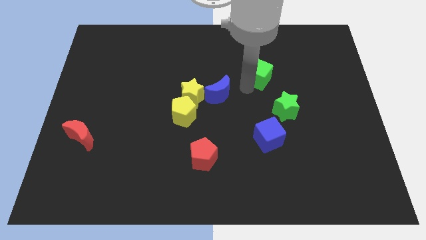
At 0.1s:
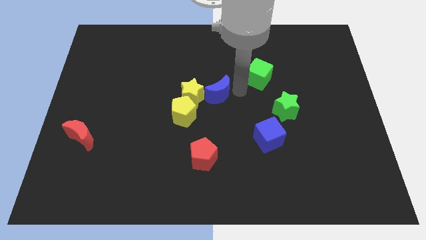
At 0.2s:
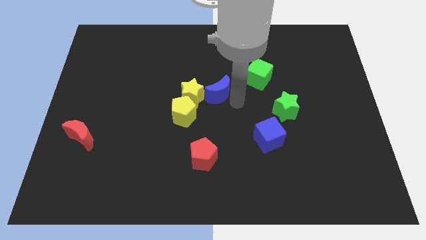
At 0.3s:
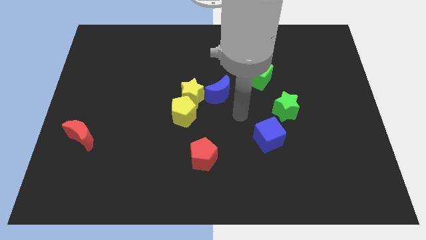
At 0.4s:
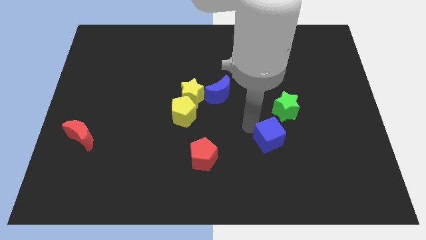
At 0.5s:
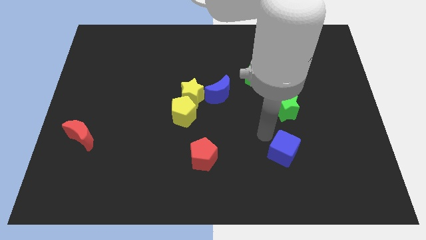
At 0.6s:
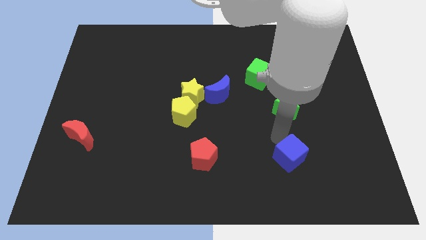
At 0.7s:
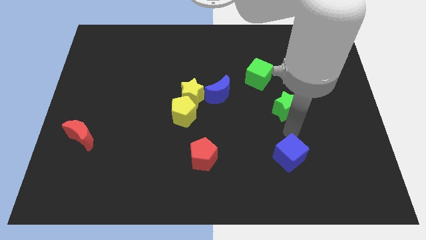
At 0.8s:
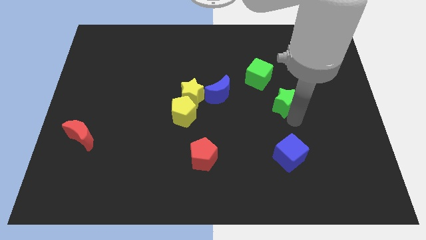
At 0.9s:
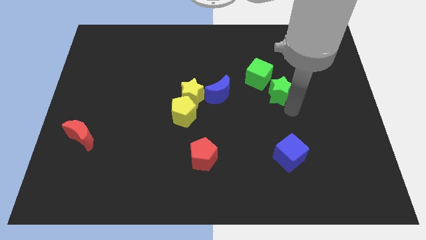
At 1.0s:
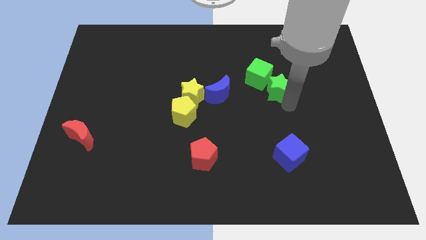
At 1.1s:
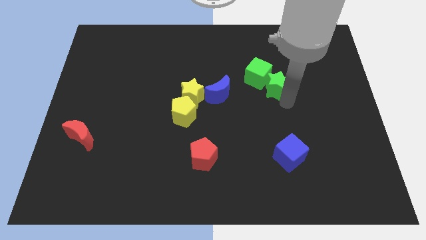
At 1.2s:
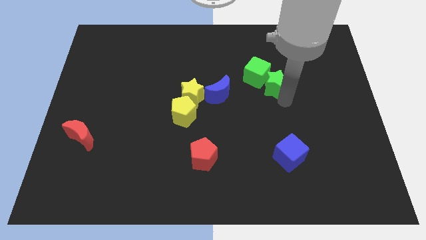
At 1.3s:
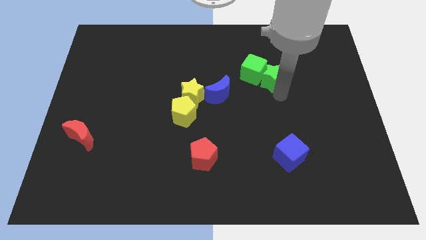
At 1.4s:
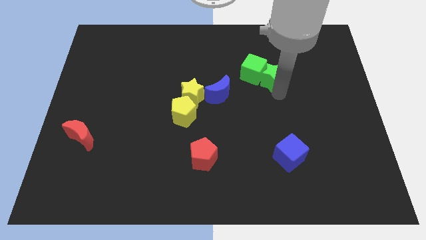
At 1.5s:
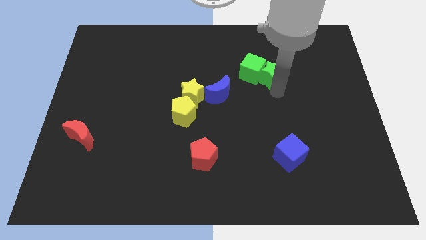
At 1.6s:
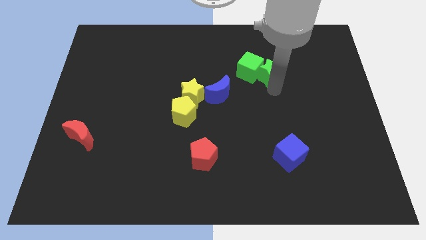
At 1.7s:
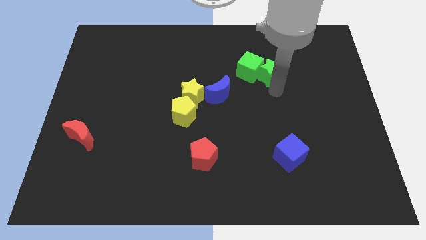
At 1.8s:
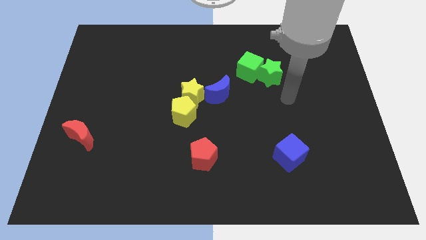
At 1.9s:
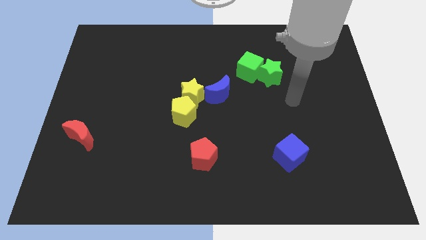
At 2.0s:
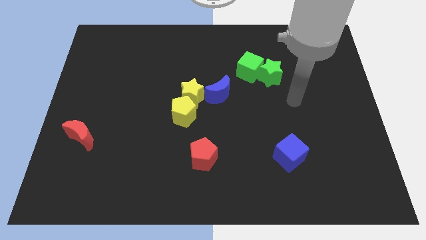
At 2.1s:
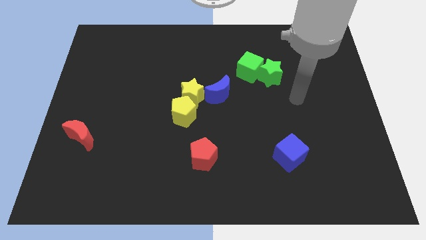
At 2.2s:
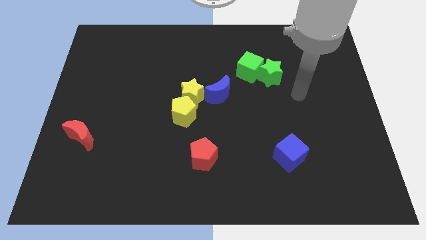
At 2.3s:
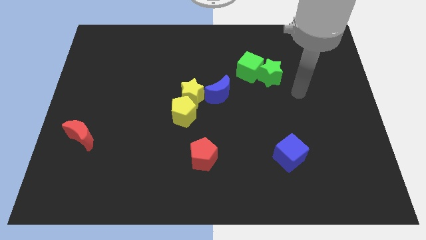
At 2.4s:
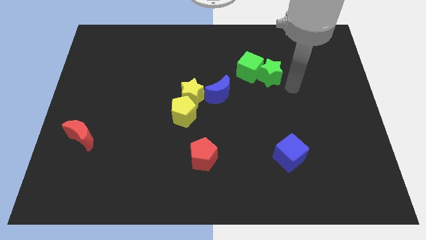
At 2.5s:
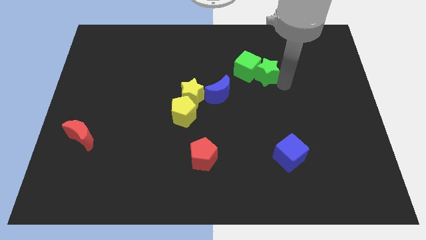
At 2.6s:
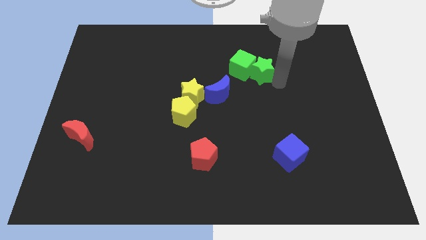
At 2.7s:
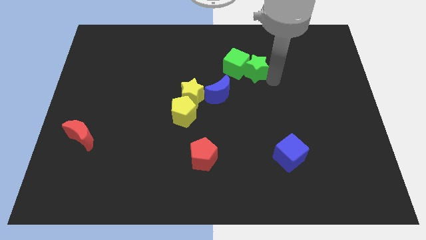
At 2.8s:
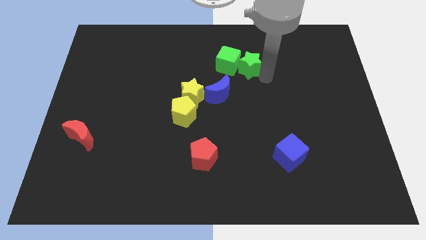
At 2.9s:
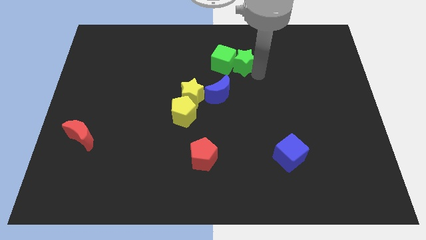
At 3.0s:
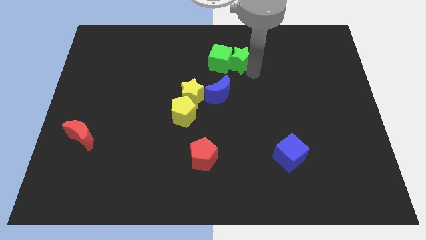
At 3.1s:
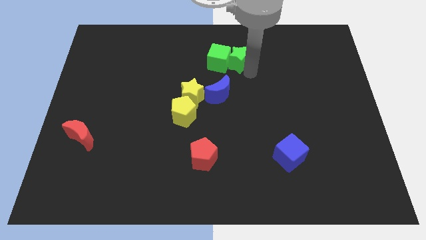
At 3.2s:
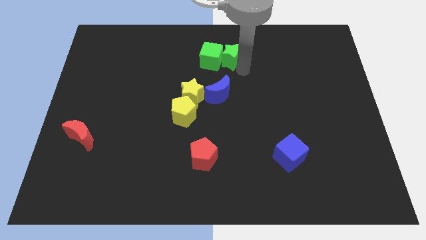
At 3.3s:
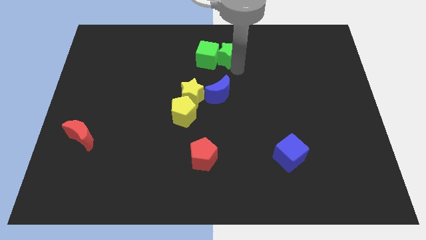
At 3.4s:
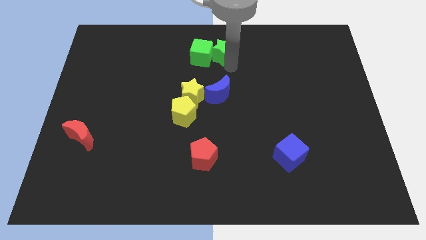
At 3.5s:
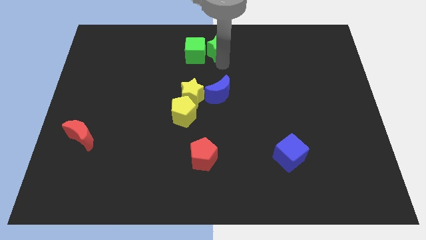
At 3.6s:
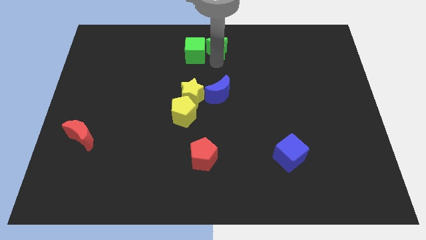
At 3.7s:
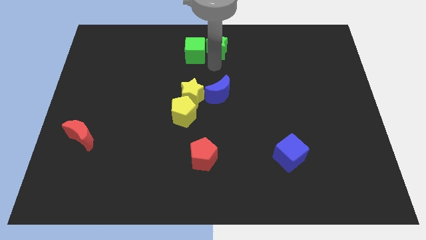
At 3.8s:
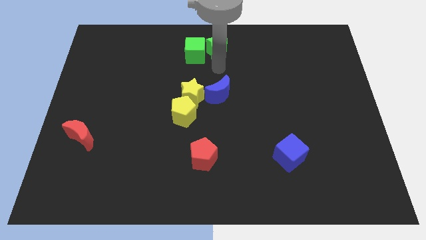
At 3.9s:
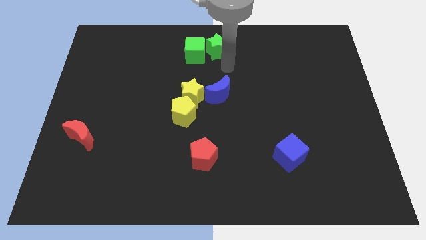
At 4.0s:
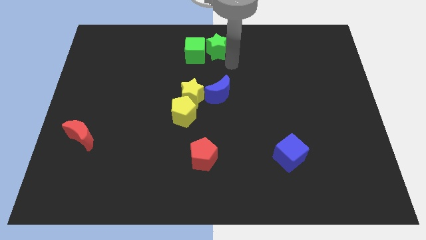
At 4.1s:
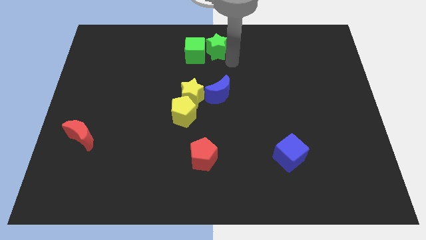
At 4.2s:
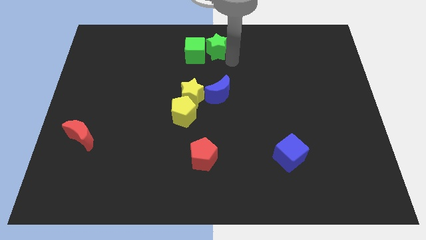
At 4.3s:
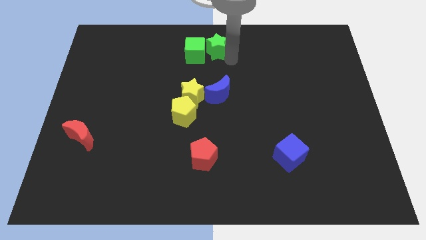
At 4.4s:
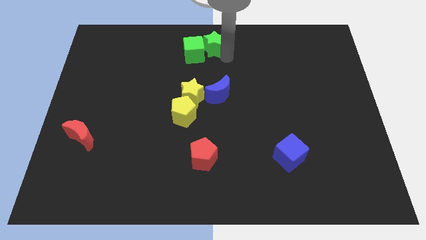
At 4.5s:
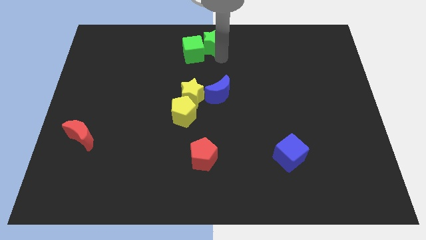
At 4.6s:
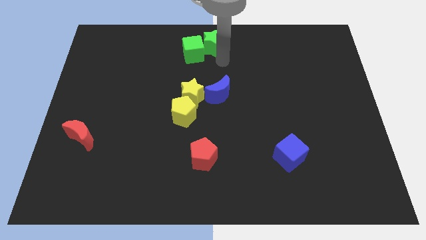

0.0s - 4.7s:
push the green cube and green star to the top center

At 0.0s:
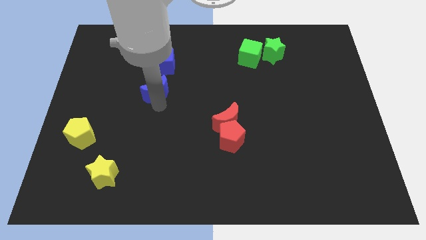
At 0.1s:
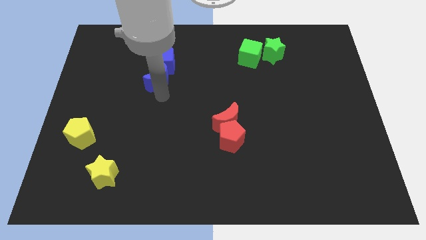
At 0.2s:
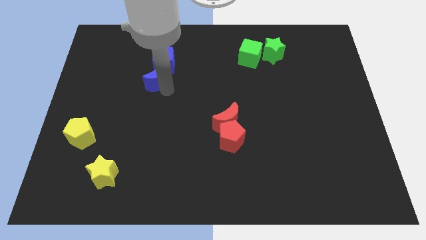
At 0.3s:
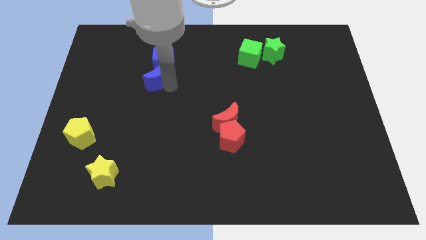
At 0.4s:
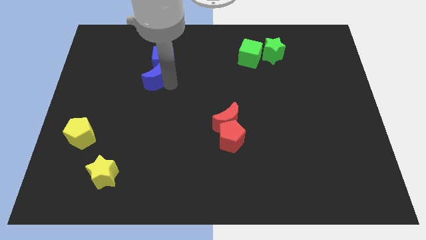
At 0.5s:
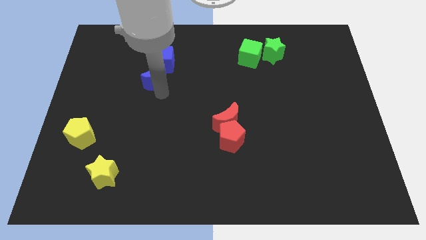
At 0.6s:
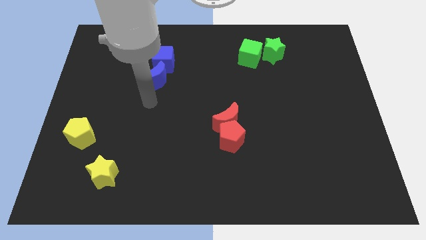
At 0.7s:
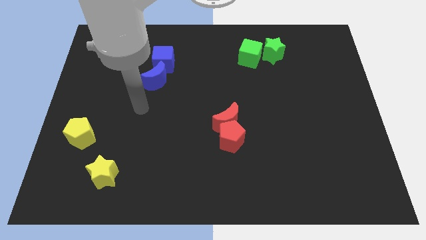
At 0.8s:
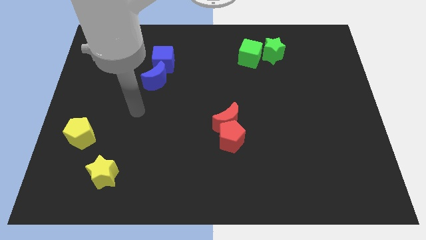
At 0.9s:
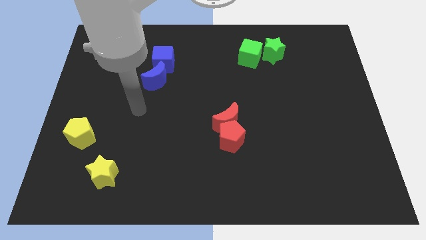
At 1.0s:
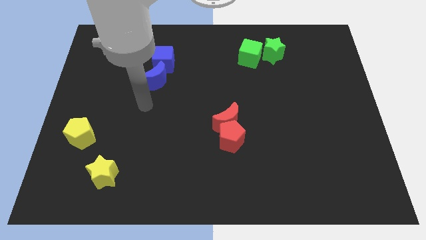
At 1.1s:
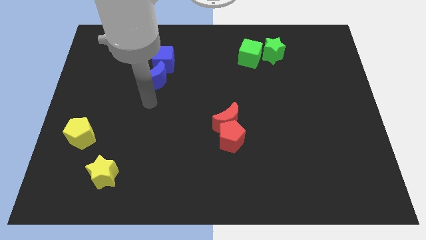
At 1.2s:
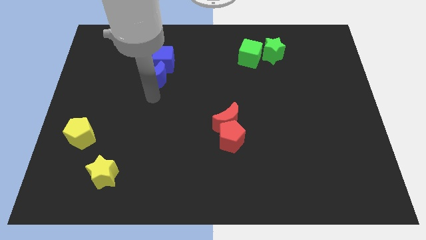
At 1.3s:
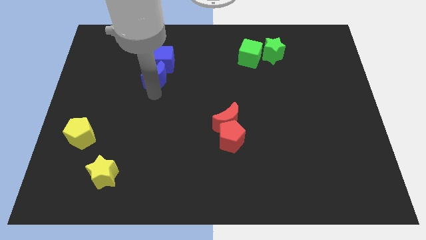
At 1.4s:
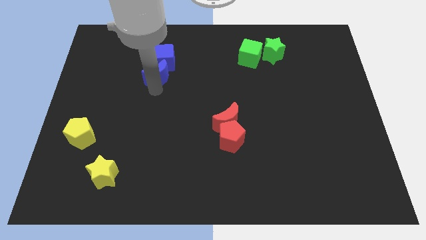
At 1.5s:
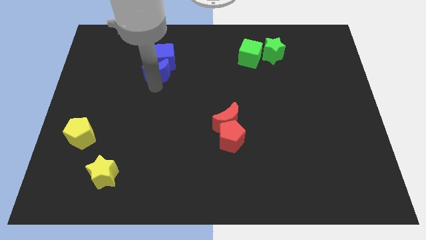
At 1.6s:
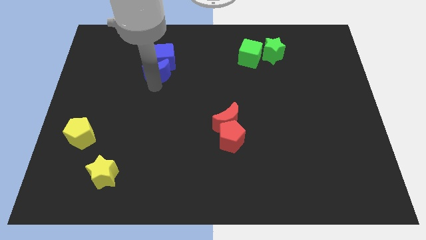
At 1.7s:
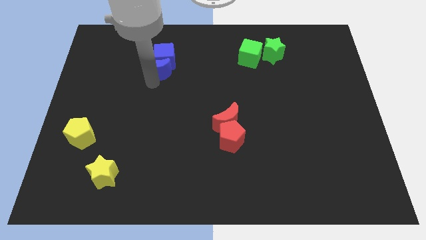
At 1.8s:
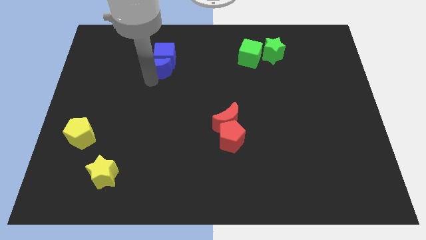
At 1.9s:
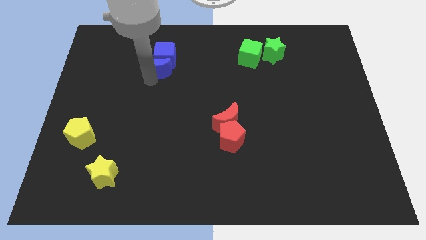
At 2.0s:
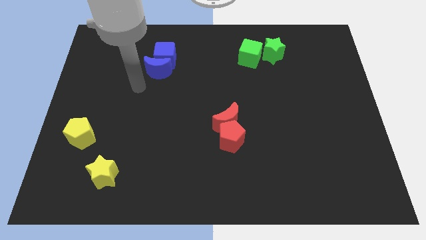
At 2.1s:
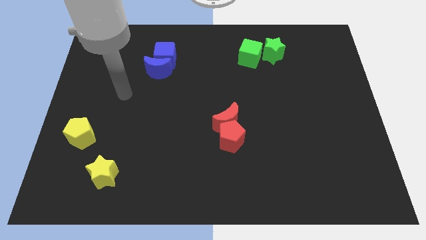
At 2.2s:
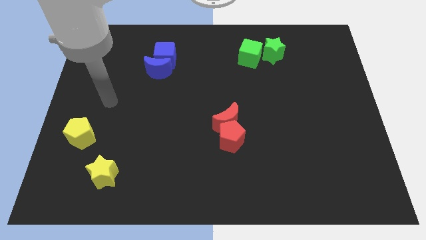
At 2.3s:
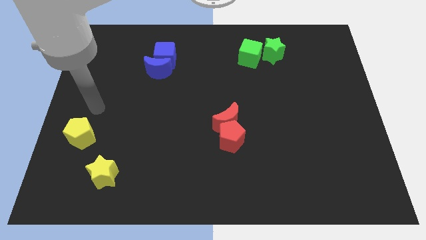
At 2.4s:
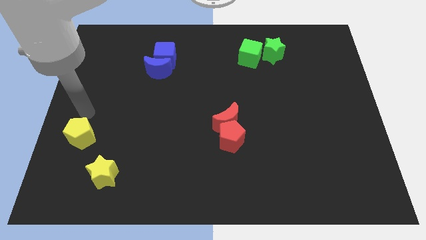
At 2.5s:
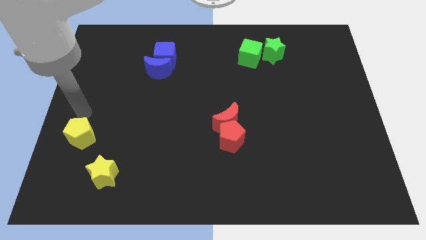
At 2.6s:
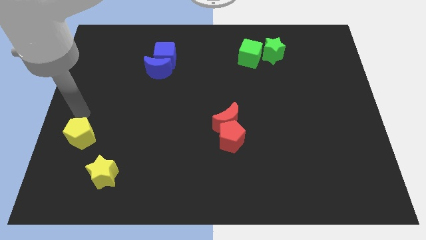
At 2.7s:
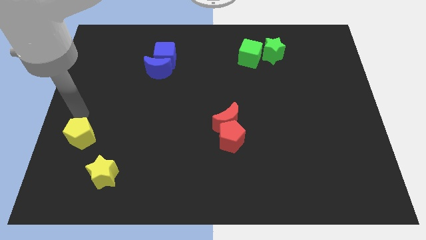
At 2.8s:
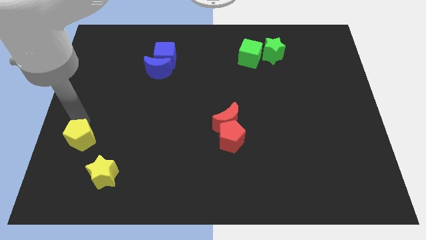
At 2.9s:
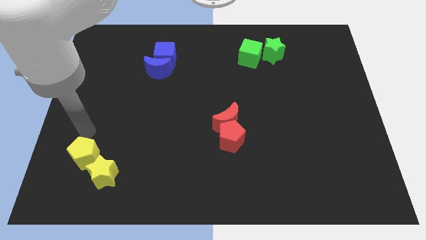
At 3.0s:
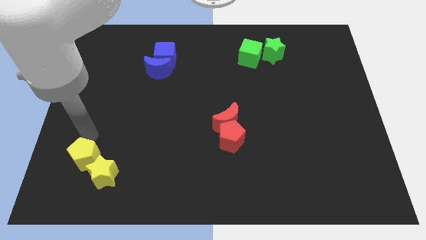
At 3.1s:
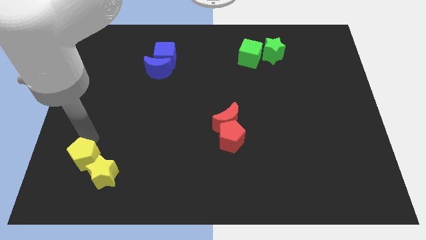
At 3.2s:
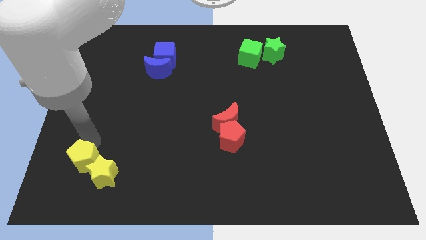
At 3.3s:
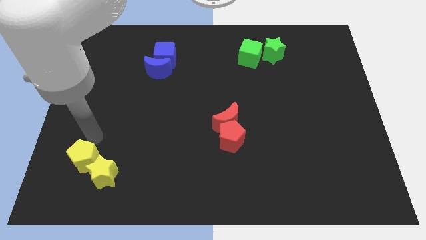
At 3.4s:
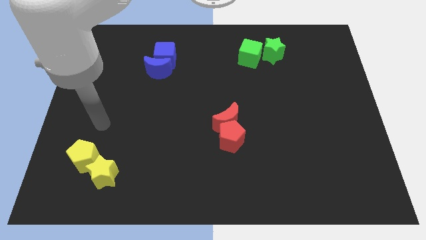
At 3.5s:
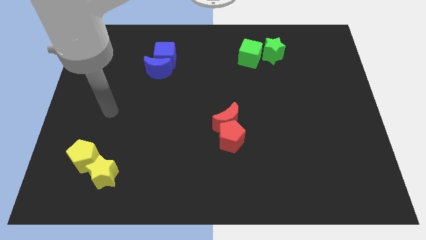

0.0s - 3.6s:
slide the yellow pentagon into the yellow star

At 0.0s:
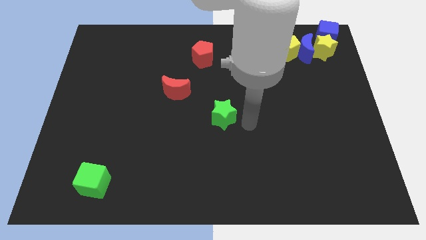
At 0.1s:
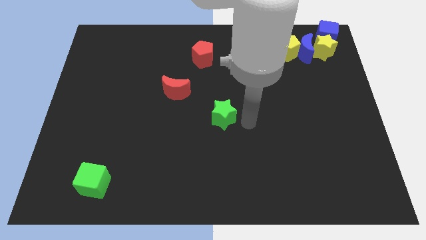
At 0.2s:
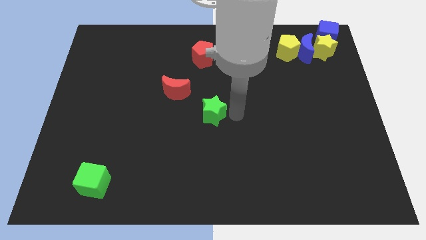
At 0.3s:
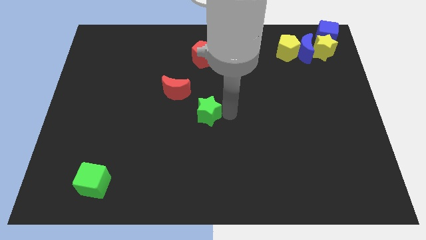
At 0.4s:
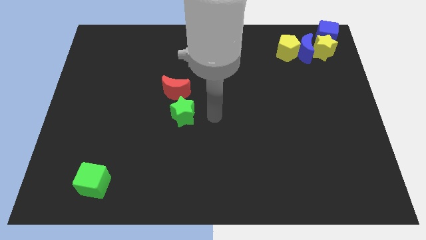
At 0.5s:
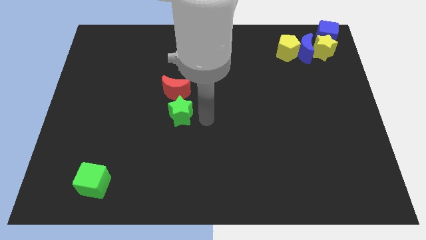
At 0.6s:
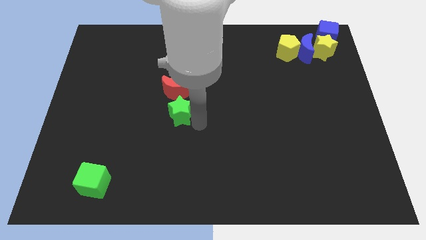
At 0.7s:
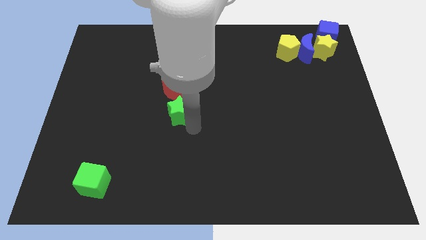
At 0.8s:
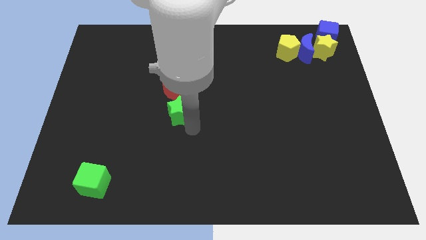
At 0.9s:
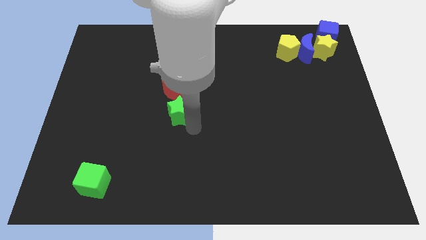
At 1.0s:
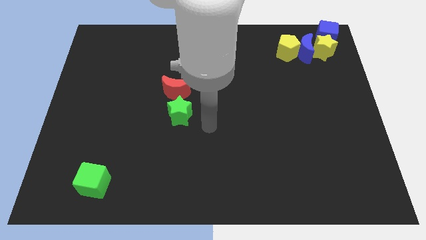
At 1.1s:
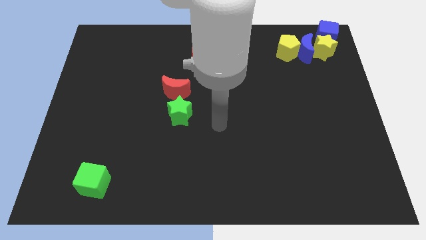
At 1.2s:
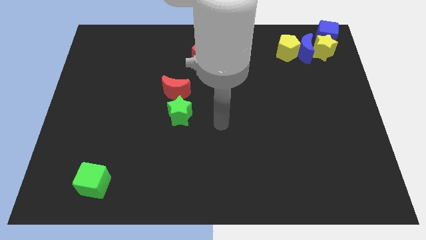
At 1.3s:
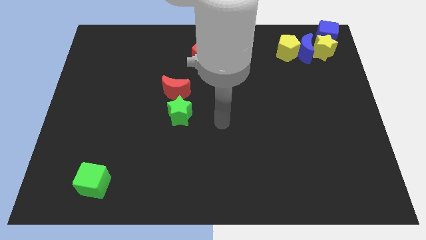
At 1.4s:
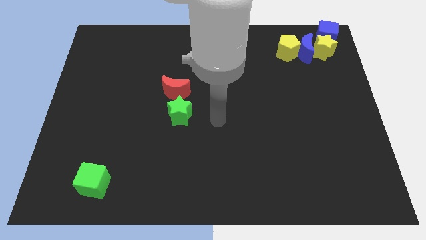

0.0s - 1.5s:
put the green star underneath the red crescent
